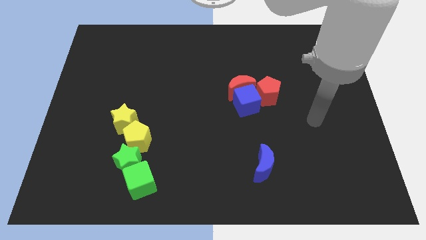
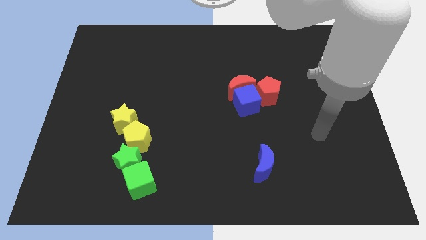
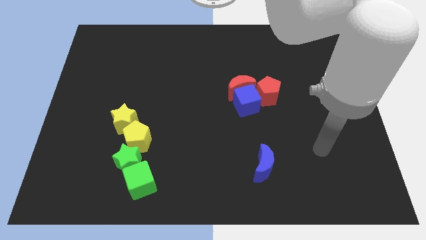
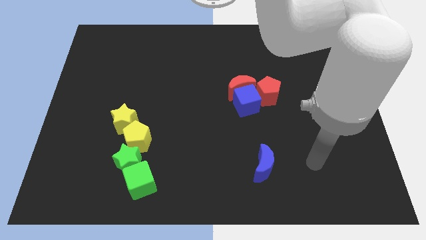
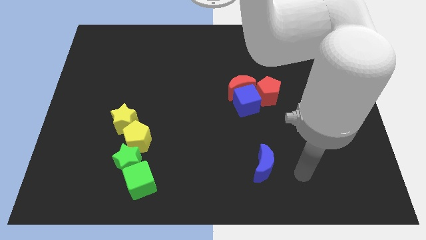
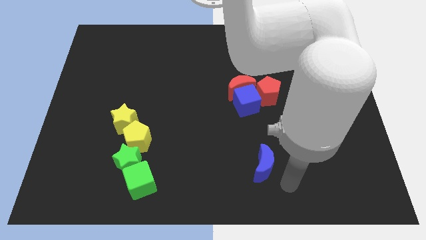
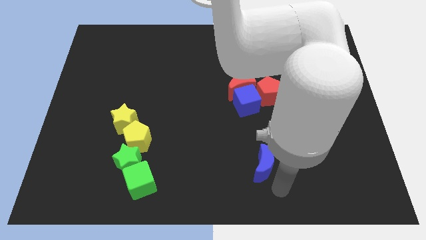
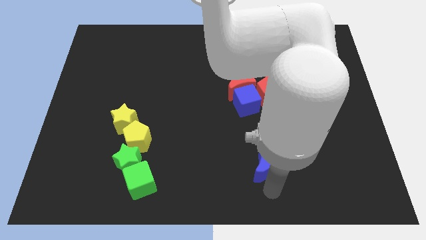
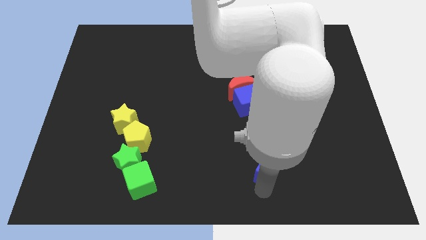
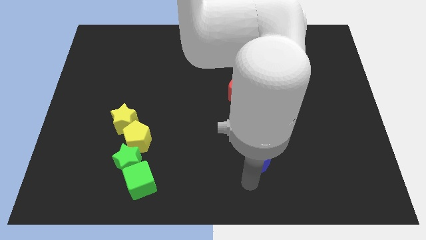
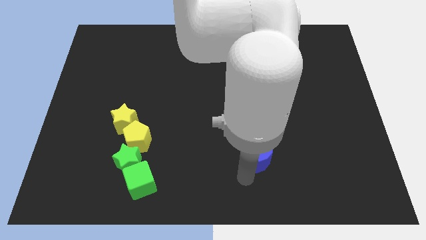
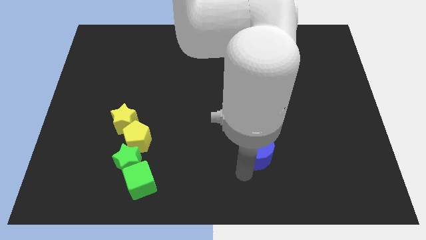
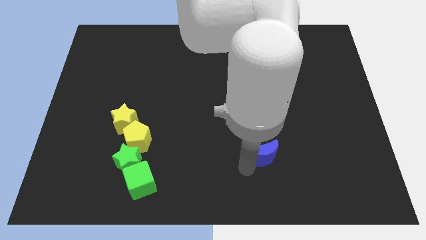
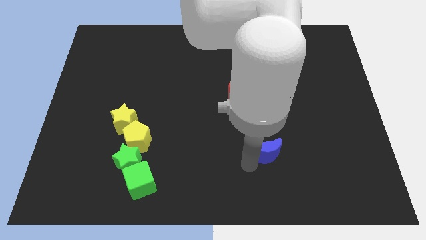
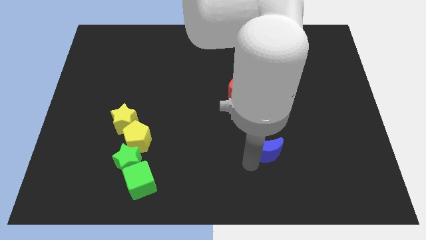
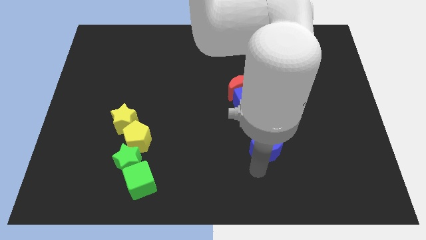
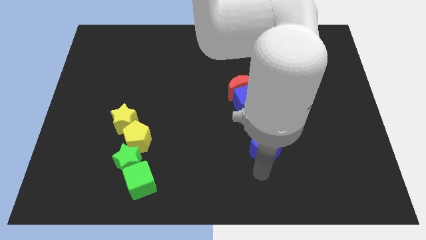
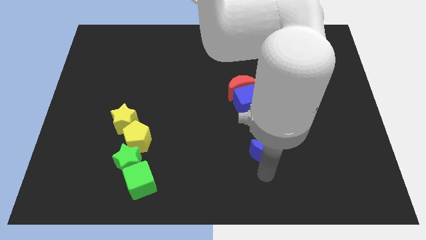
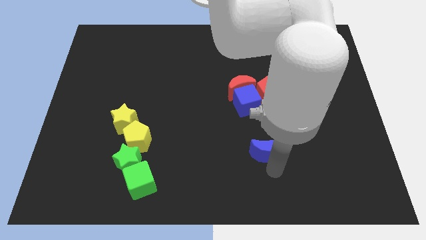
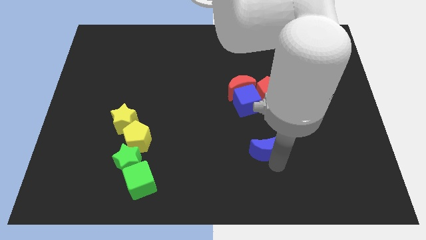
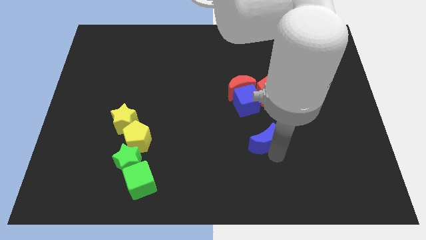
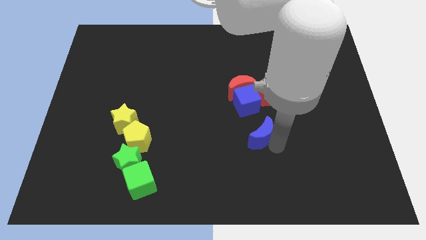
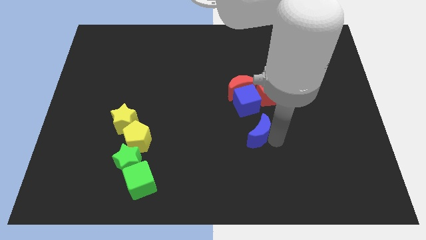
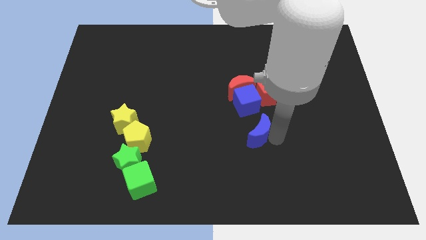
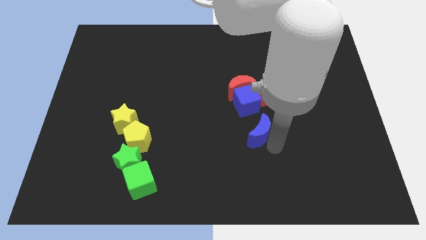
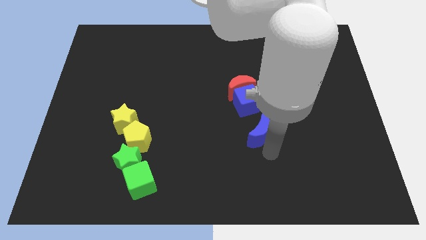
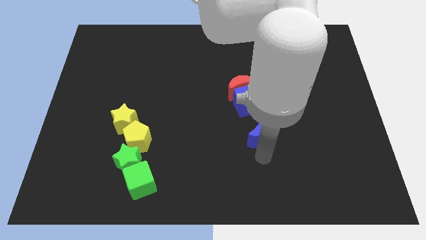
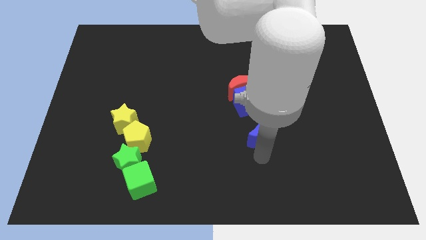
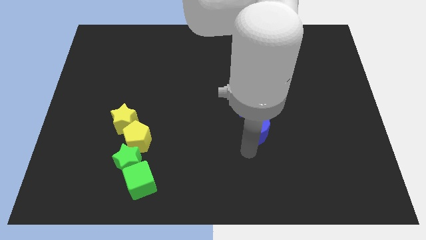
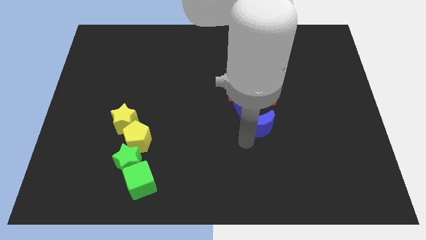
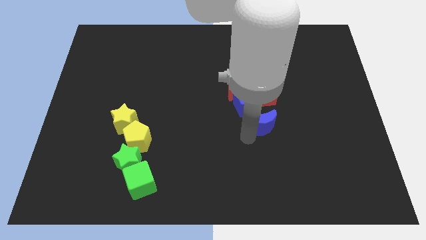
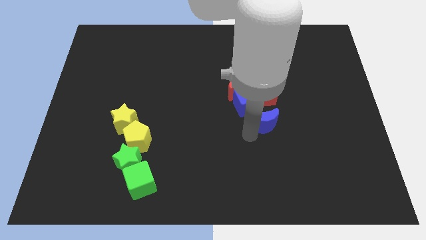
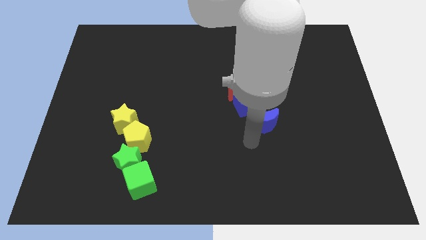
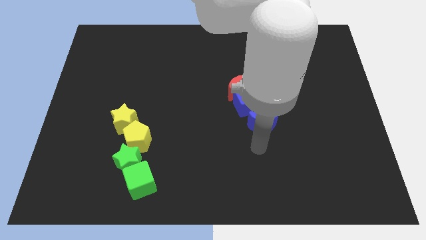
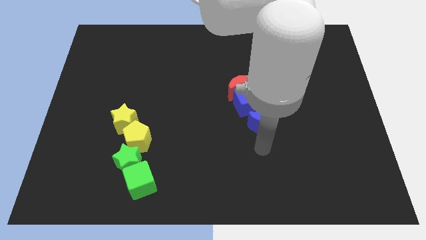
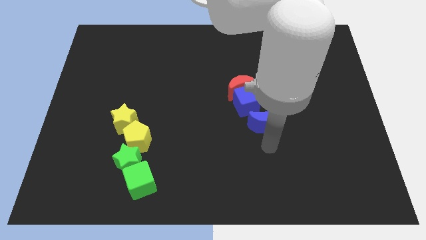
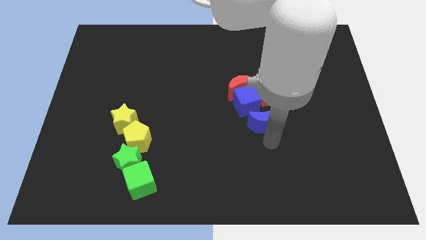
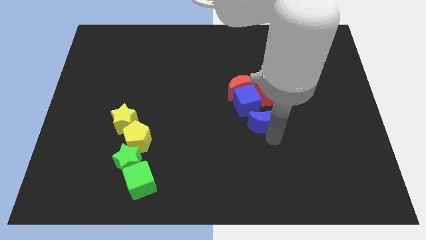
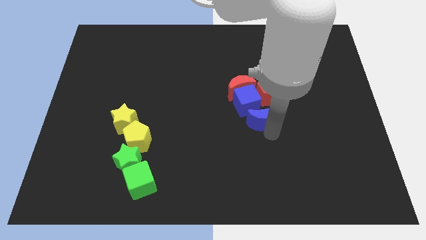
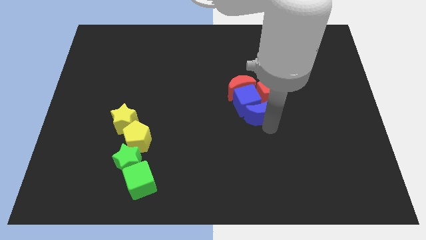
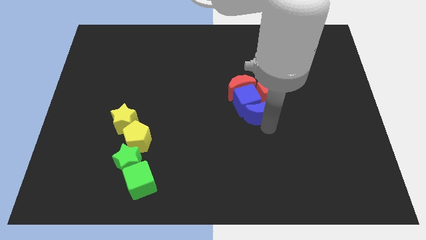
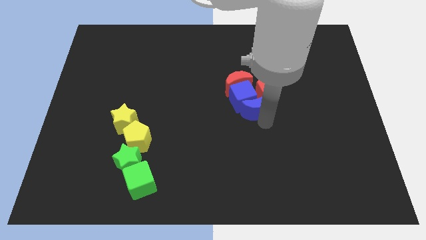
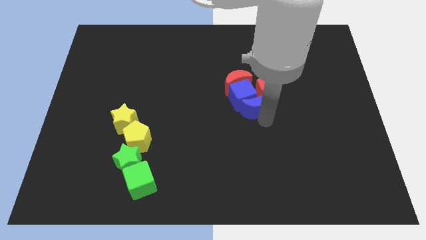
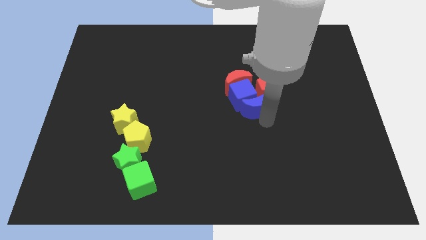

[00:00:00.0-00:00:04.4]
push the blue crescent into the group of blocks

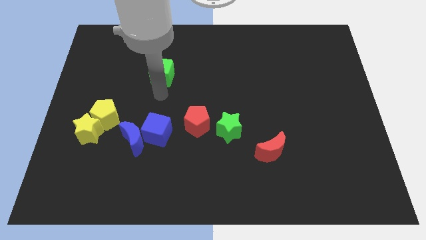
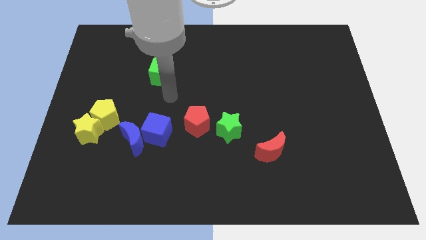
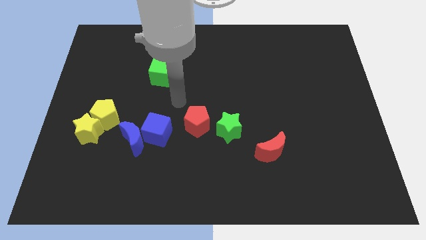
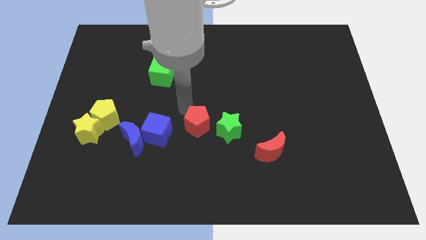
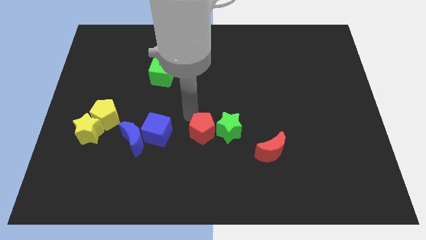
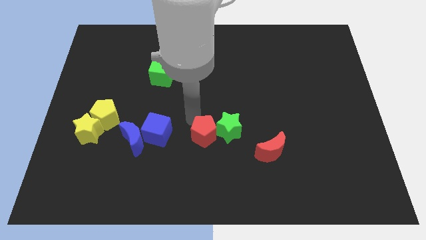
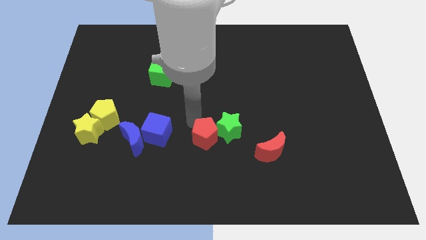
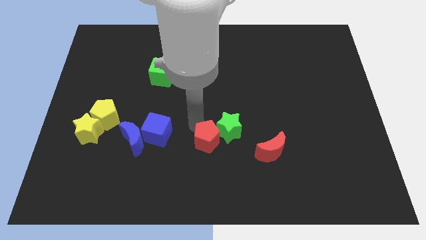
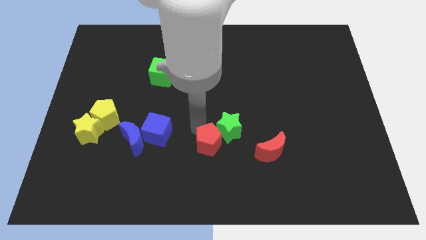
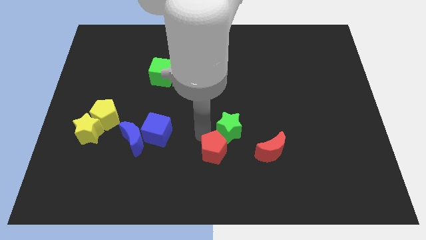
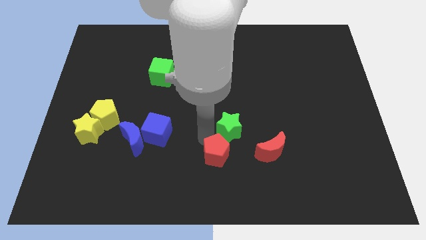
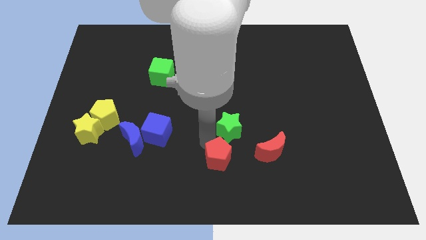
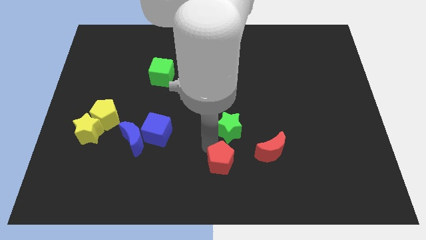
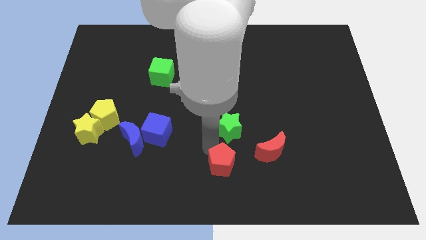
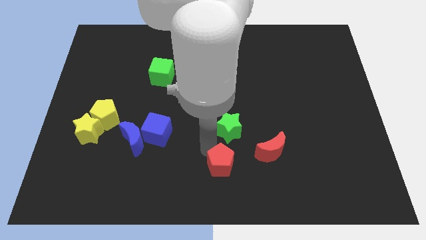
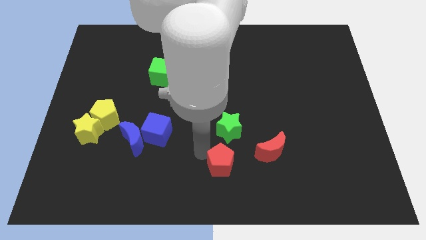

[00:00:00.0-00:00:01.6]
push the red pentagon towards the bottom of green star

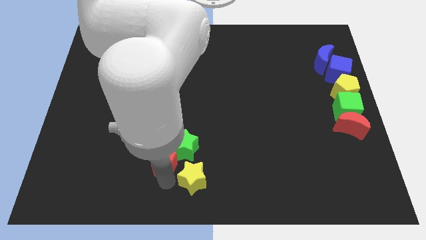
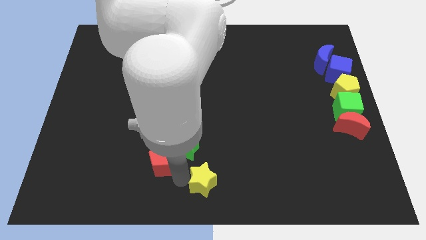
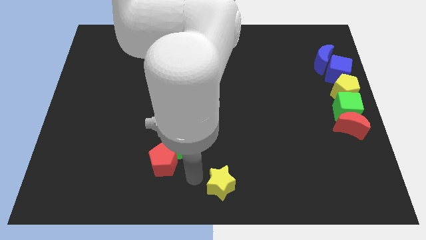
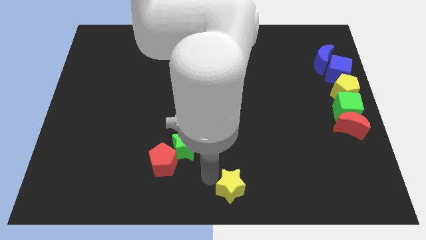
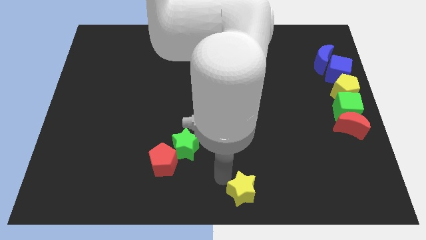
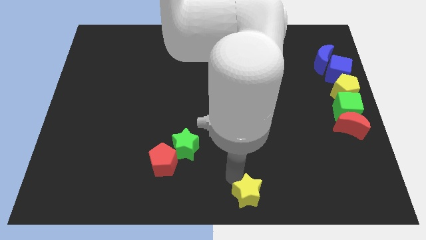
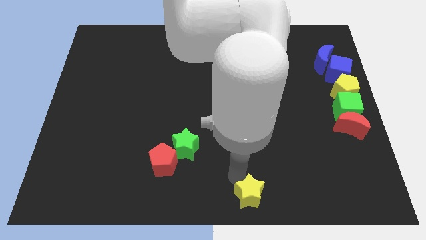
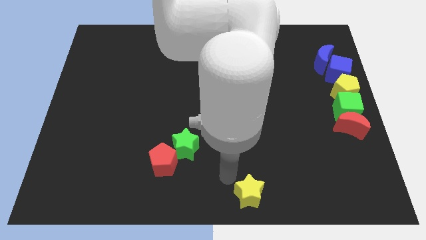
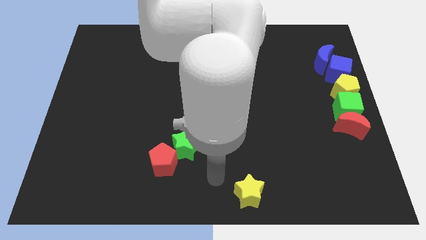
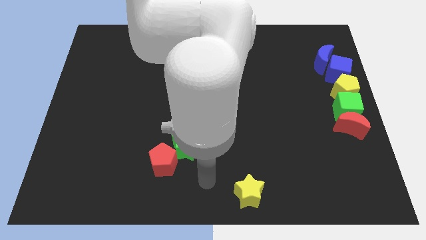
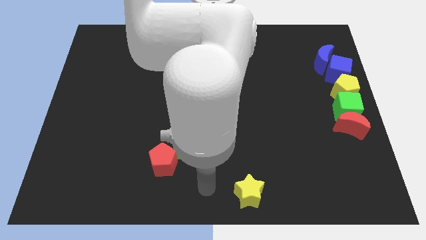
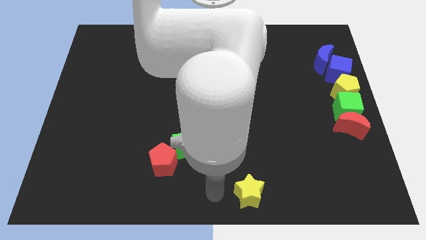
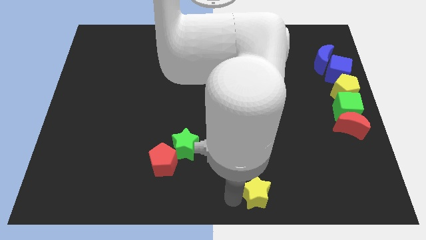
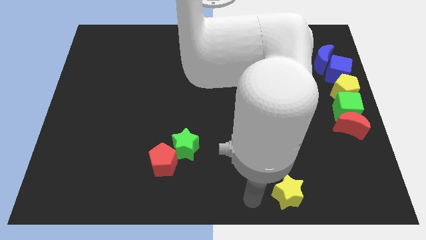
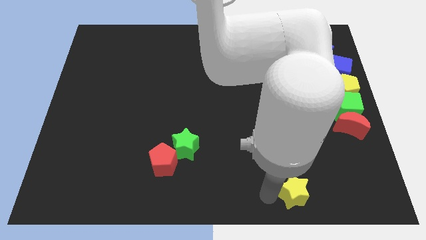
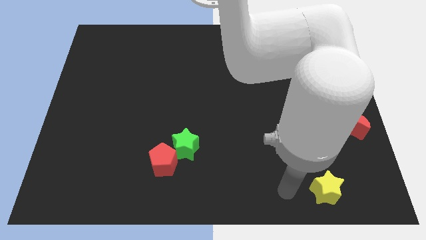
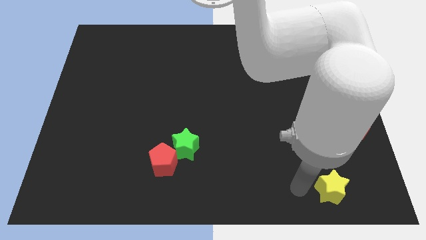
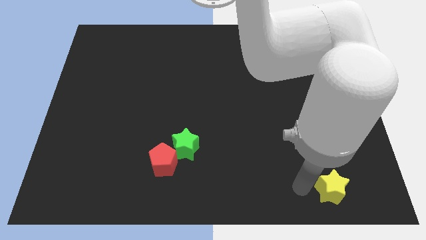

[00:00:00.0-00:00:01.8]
move the yellow star towards the bottom right corner

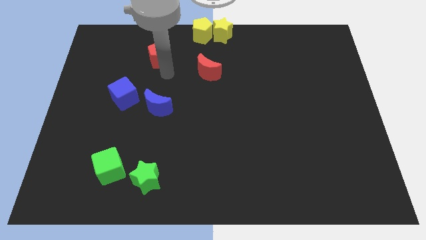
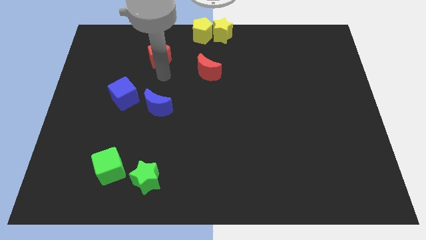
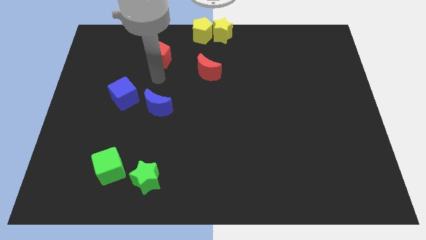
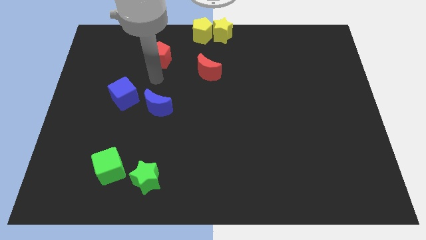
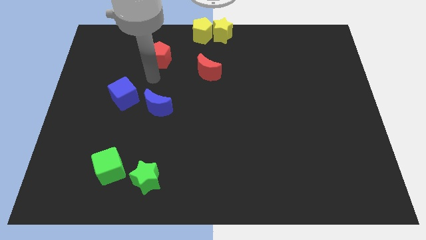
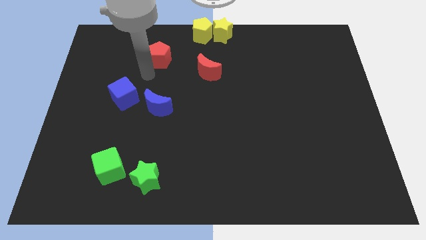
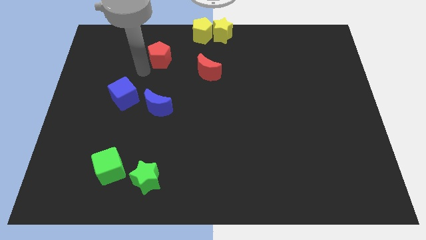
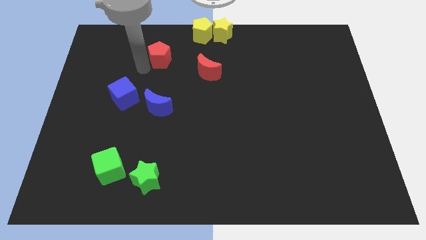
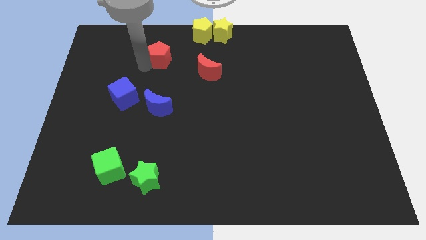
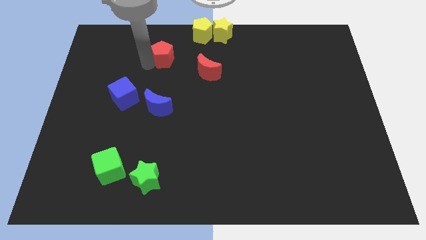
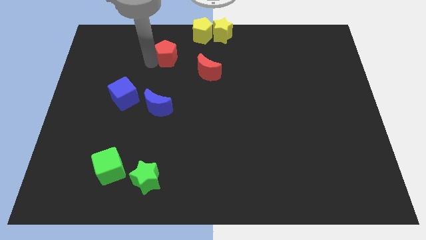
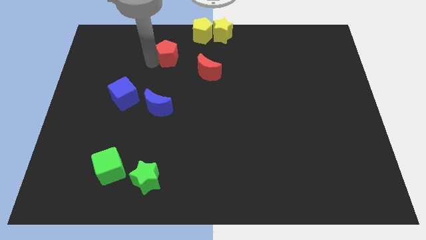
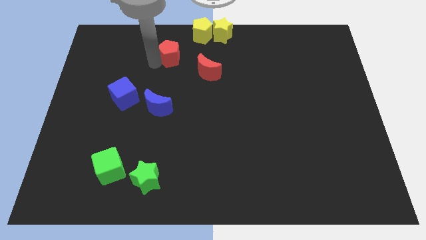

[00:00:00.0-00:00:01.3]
move the red pentagon towards the yellow pentagon

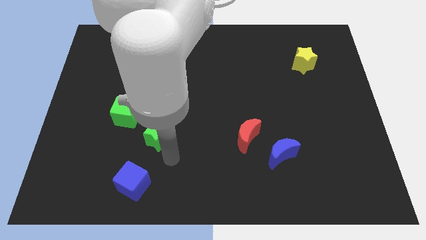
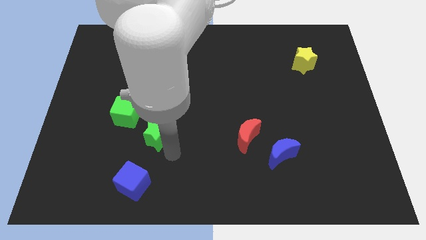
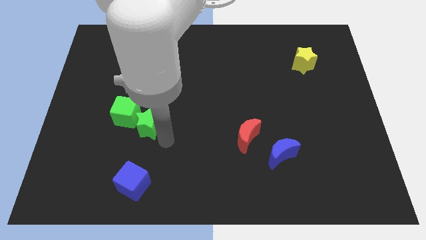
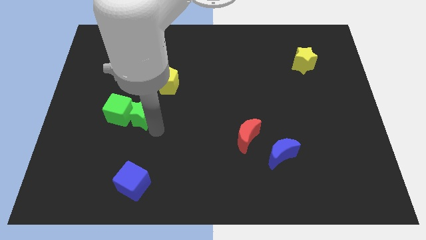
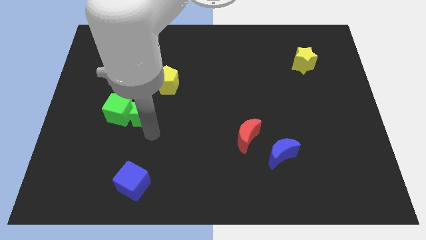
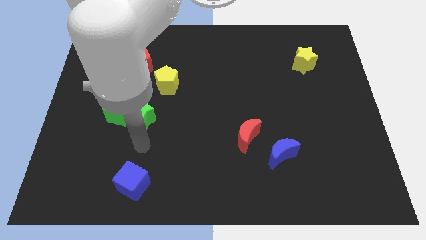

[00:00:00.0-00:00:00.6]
move the green star into the green cube
